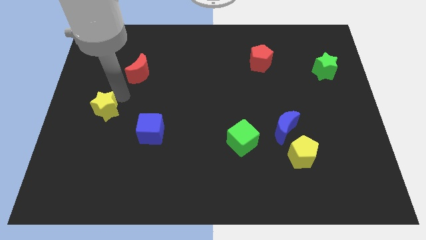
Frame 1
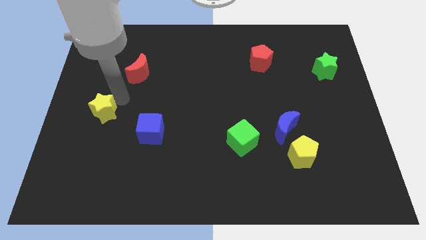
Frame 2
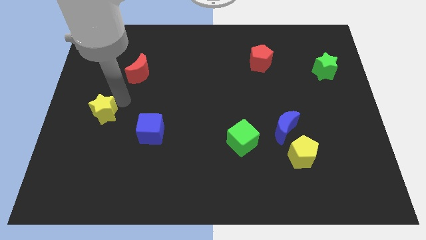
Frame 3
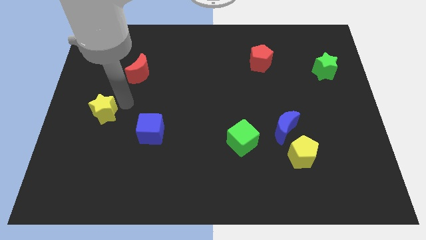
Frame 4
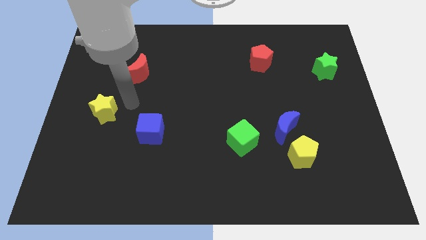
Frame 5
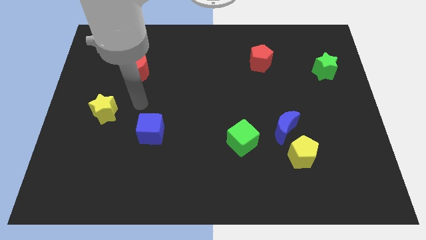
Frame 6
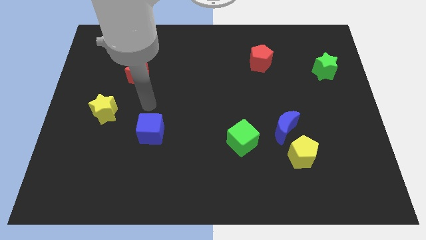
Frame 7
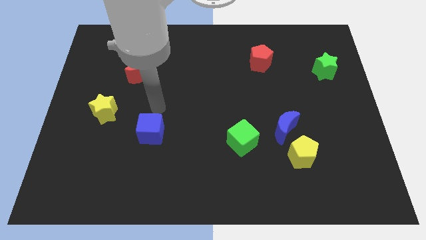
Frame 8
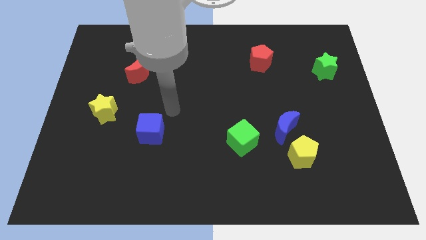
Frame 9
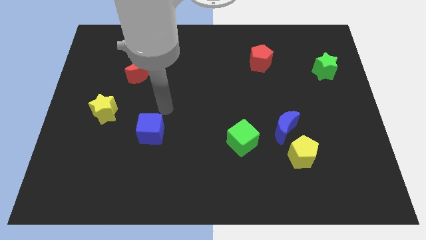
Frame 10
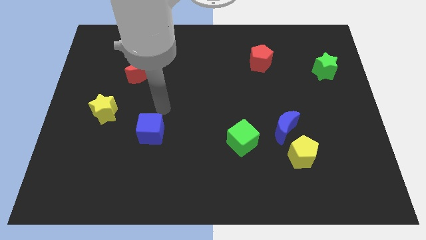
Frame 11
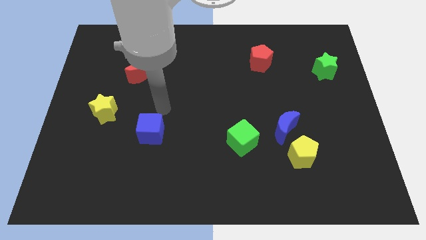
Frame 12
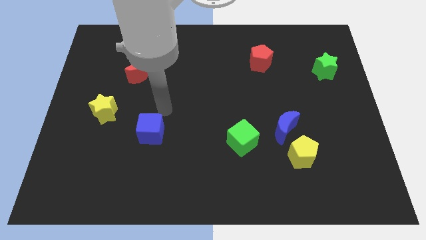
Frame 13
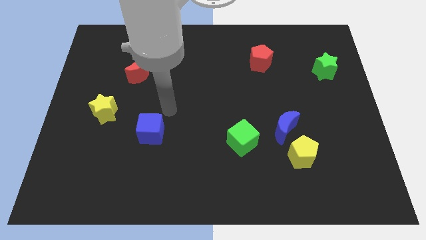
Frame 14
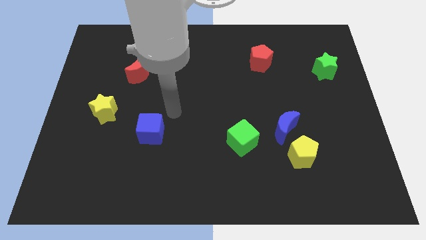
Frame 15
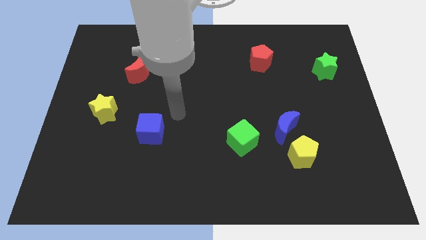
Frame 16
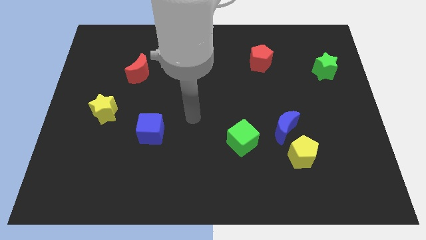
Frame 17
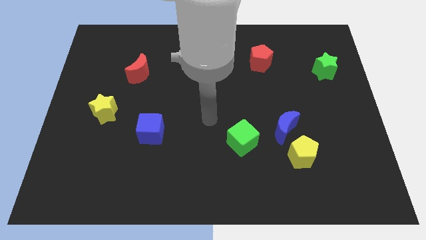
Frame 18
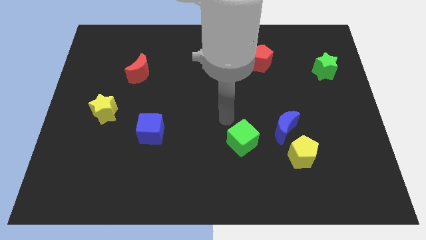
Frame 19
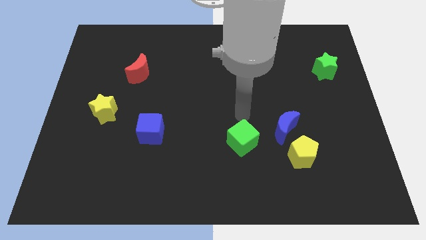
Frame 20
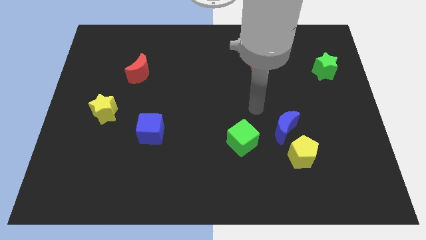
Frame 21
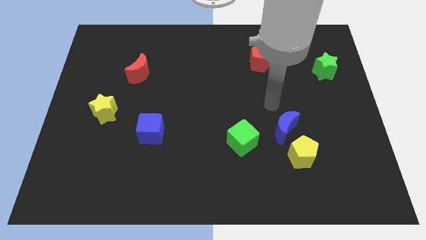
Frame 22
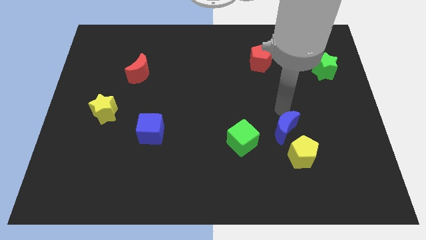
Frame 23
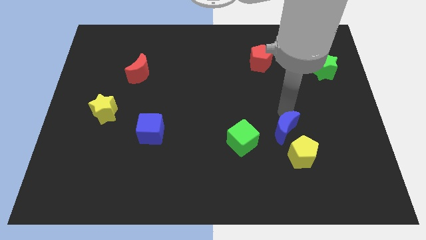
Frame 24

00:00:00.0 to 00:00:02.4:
move your arm to the top of the blue crescent

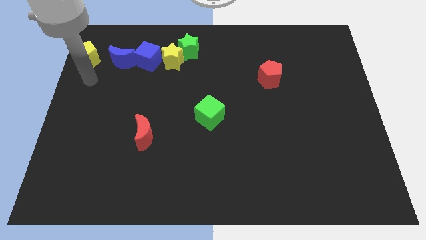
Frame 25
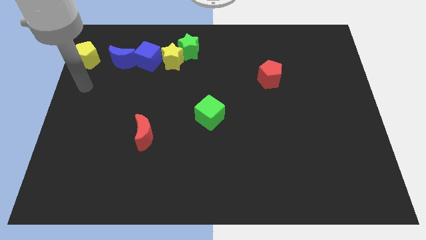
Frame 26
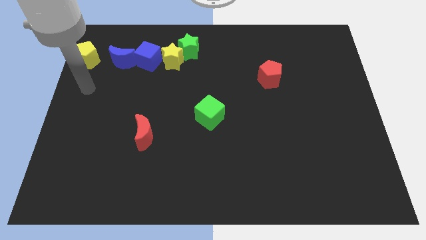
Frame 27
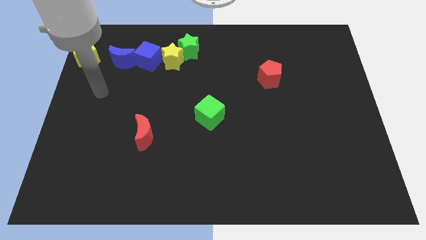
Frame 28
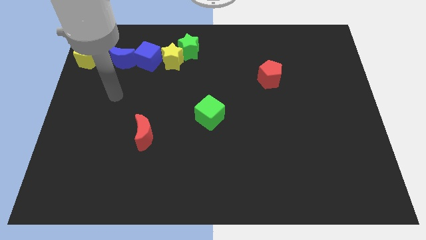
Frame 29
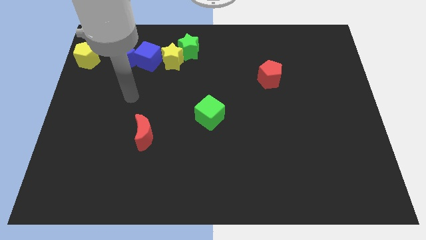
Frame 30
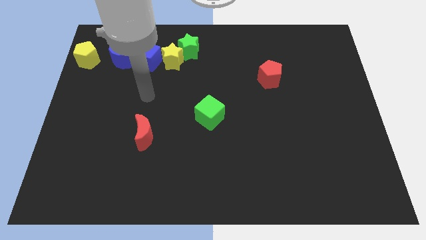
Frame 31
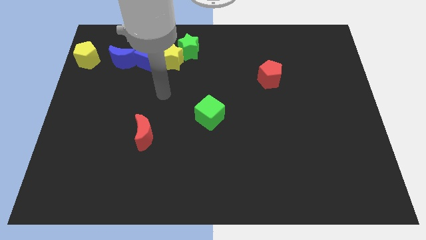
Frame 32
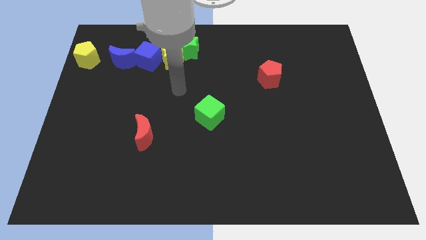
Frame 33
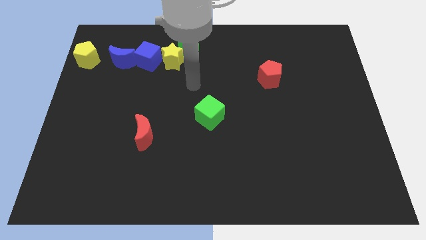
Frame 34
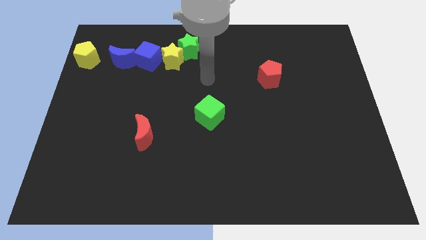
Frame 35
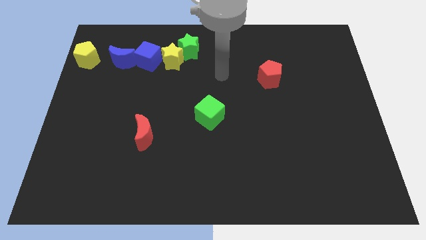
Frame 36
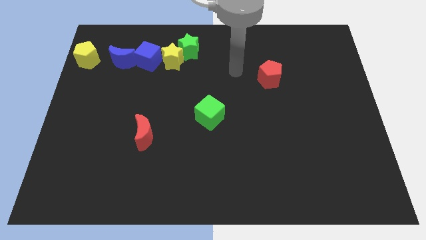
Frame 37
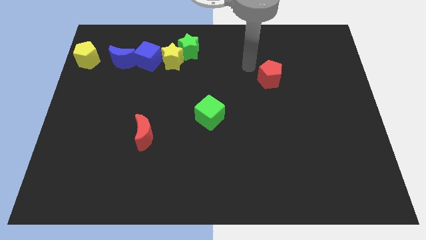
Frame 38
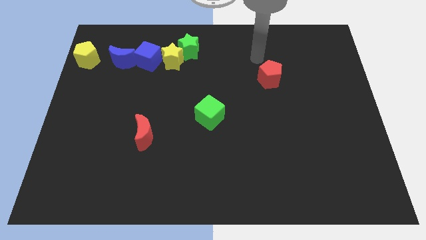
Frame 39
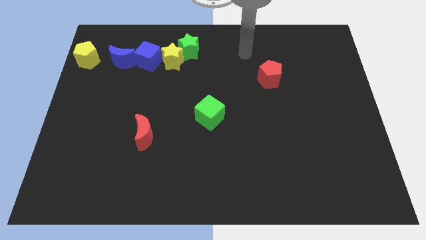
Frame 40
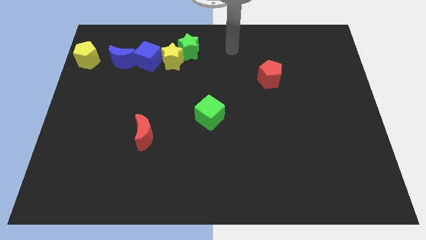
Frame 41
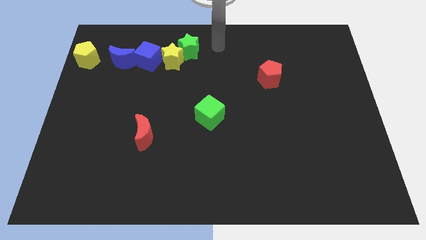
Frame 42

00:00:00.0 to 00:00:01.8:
point your arm to the right of green star

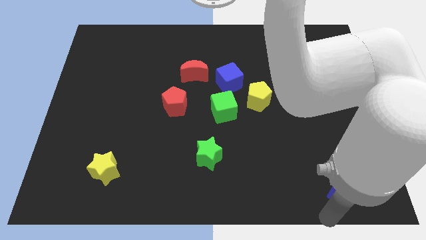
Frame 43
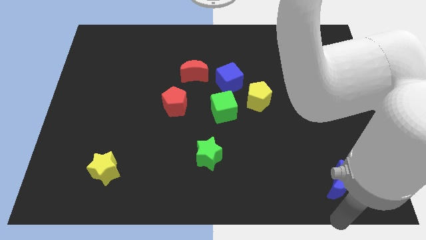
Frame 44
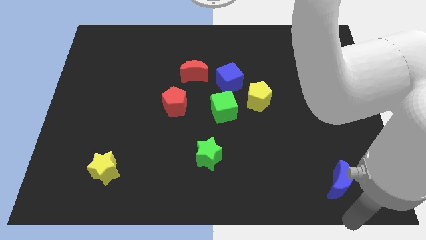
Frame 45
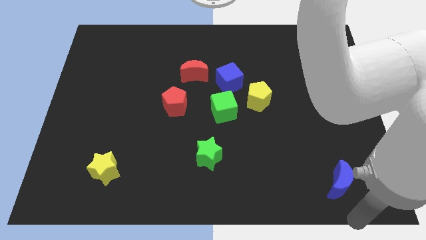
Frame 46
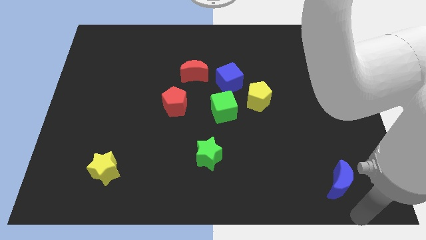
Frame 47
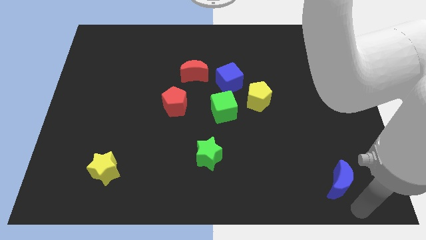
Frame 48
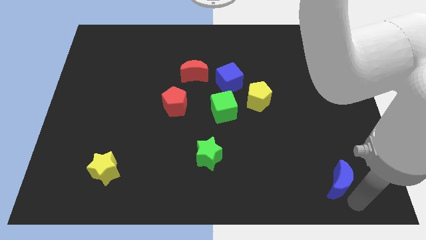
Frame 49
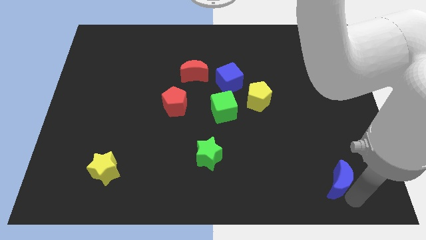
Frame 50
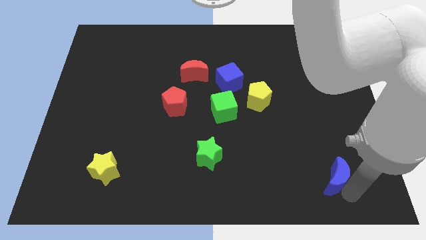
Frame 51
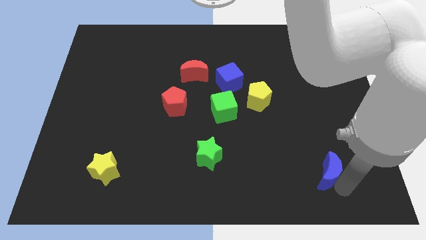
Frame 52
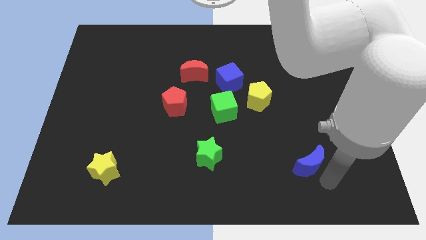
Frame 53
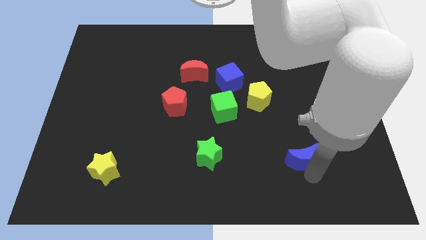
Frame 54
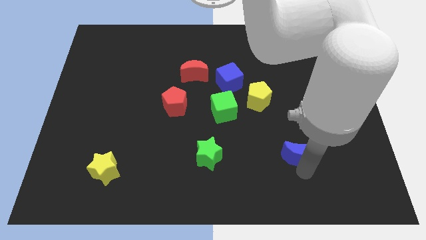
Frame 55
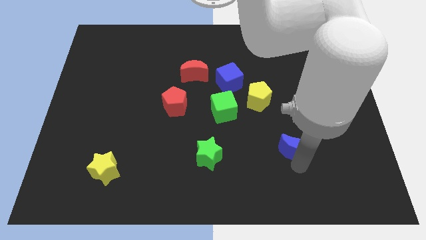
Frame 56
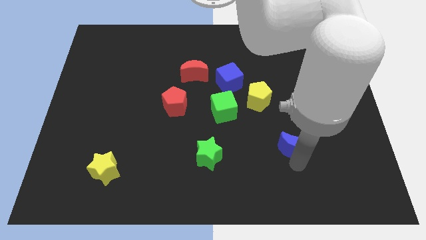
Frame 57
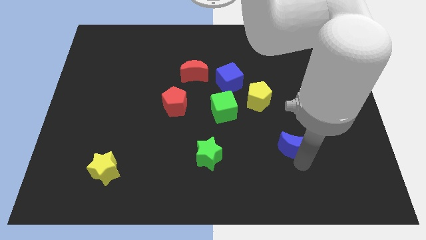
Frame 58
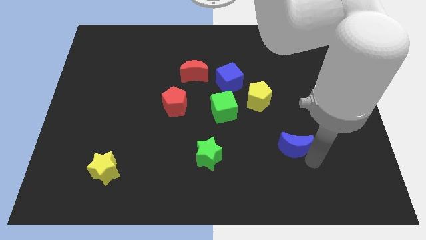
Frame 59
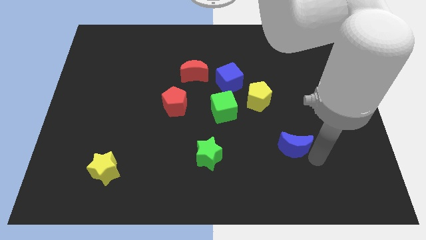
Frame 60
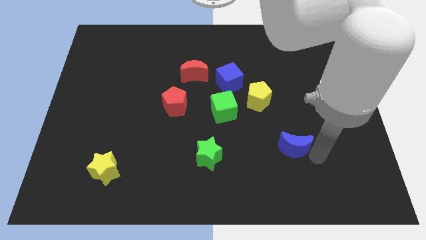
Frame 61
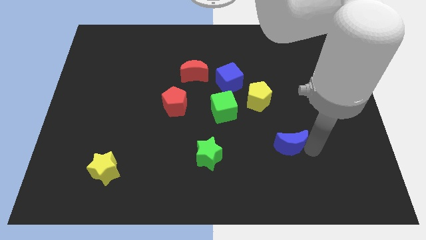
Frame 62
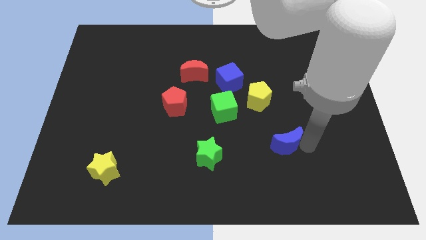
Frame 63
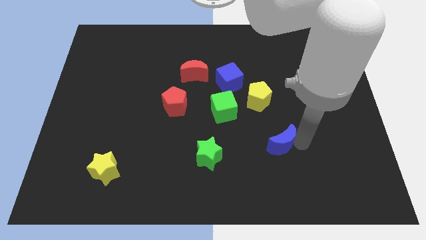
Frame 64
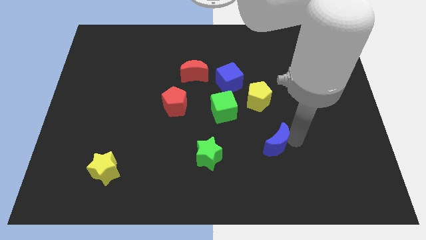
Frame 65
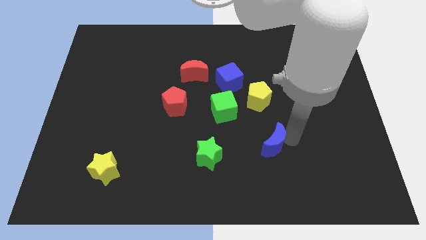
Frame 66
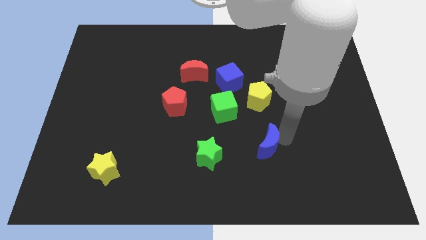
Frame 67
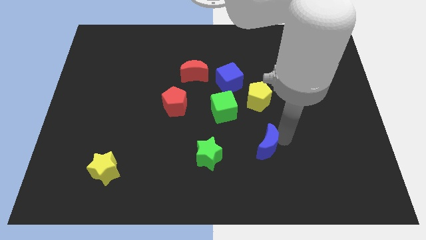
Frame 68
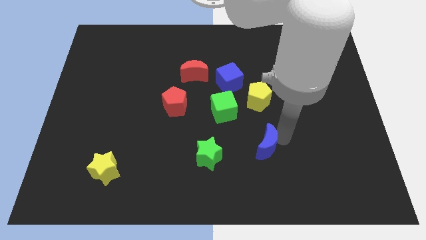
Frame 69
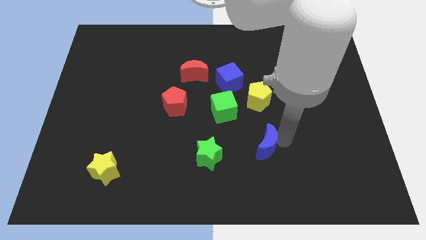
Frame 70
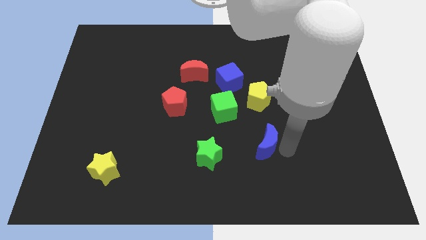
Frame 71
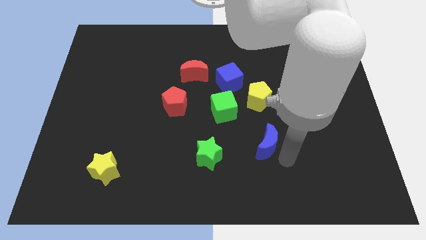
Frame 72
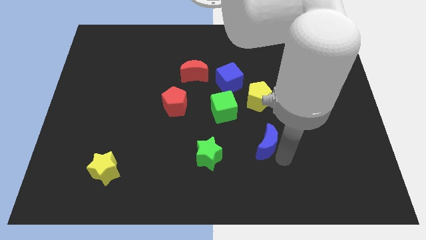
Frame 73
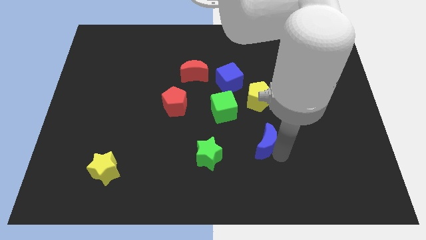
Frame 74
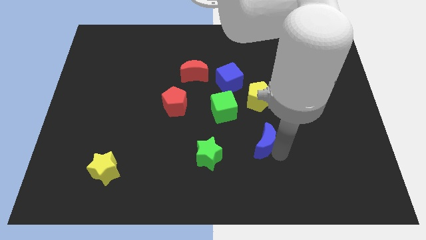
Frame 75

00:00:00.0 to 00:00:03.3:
move blue crescent horizontally right to green star

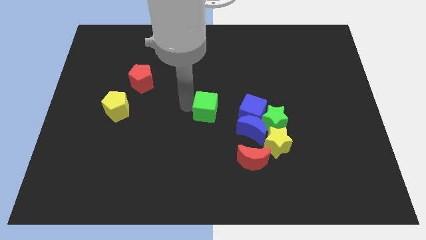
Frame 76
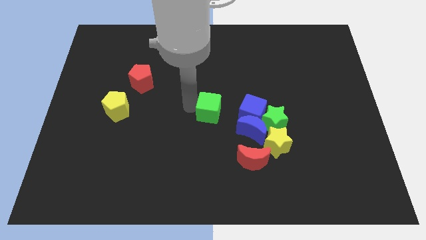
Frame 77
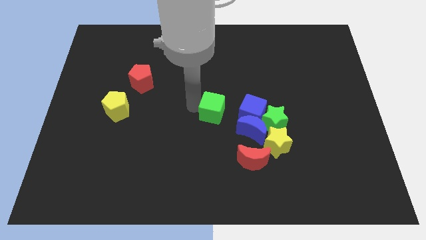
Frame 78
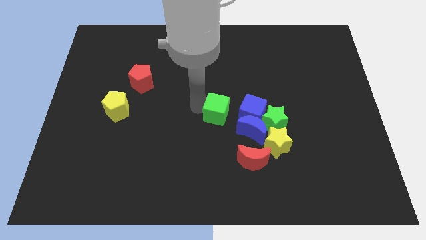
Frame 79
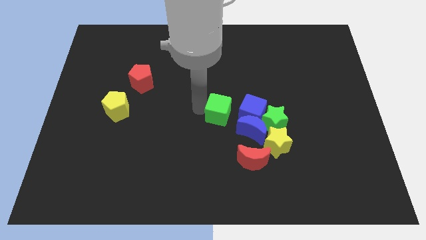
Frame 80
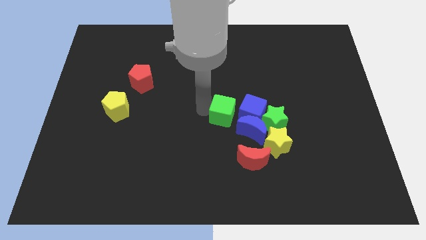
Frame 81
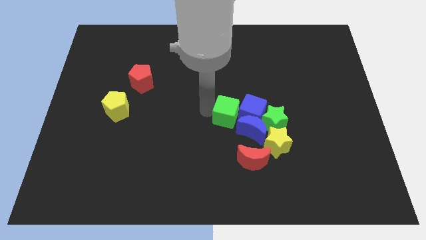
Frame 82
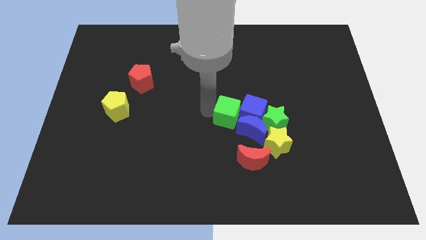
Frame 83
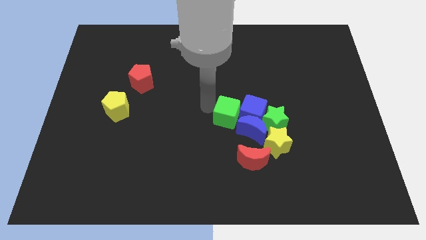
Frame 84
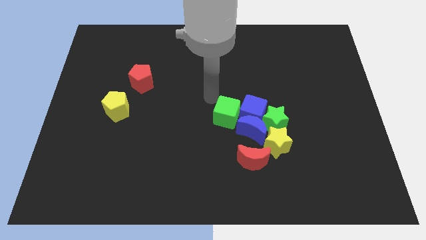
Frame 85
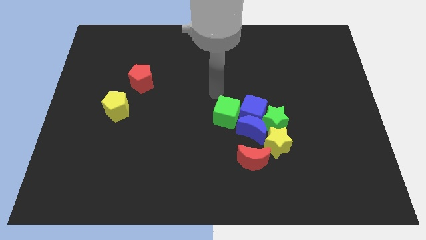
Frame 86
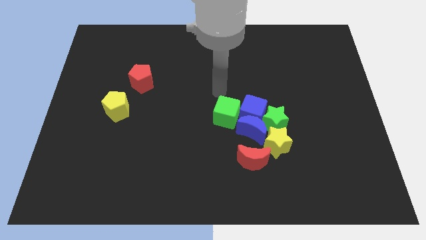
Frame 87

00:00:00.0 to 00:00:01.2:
move the green cube to the left of the blue blocks

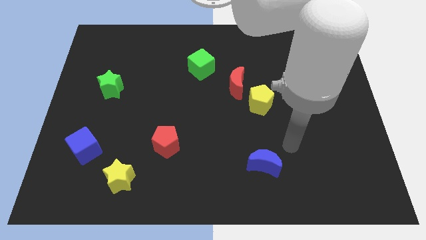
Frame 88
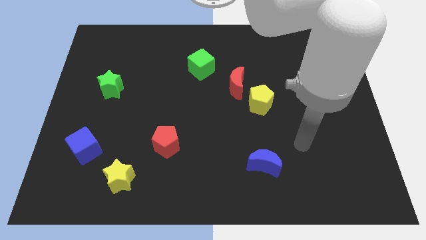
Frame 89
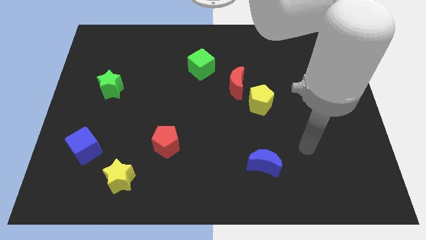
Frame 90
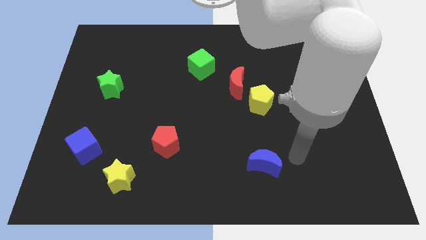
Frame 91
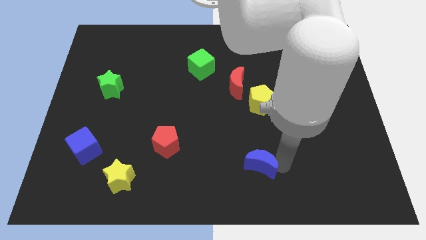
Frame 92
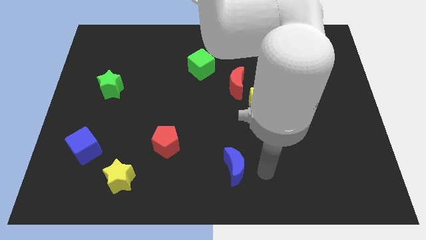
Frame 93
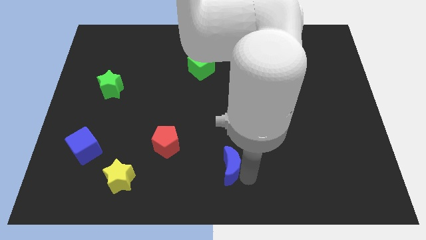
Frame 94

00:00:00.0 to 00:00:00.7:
push the blue moon towards left
